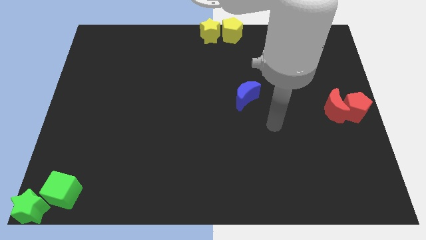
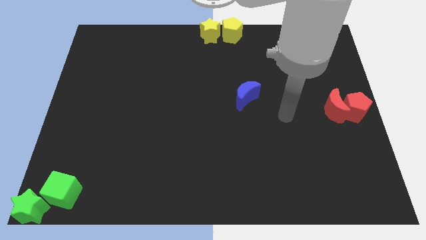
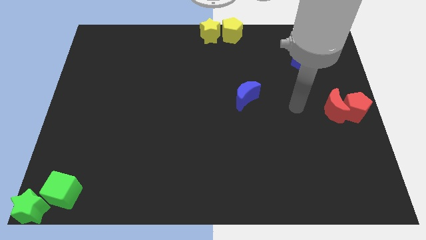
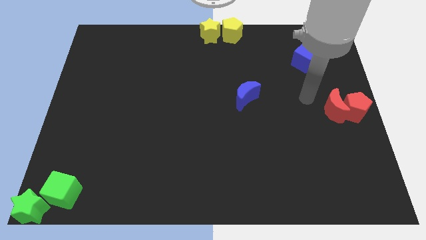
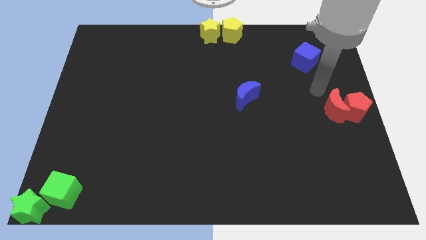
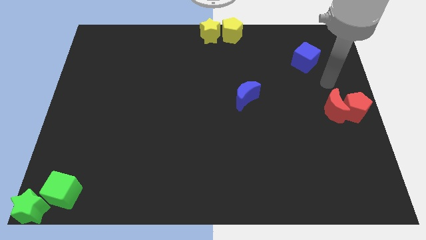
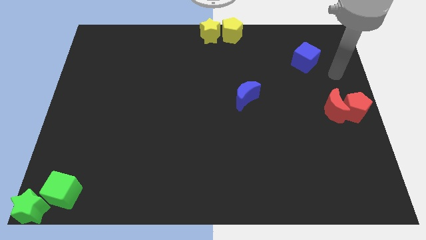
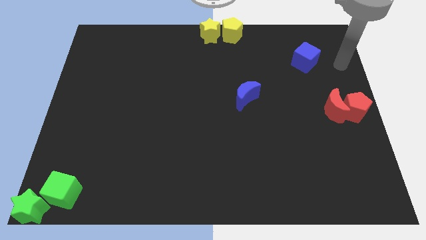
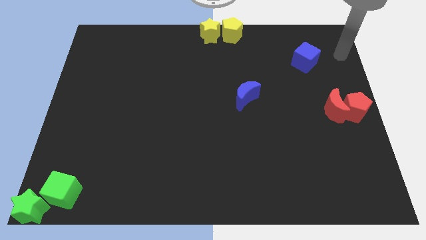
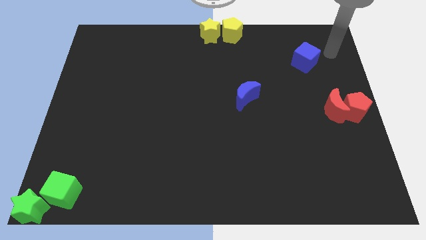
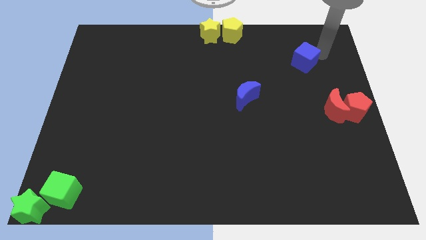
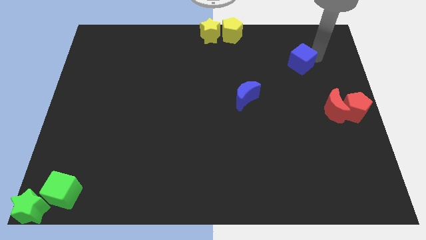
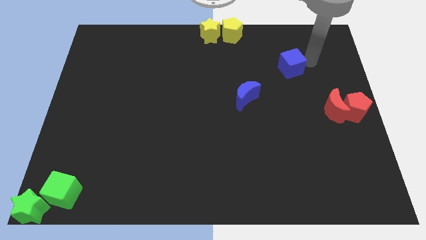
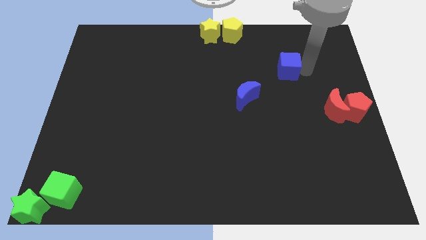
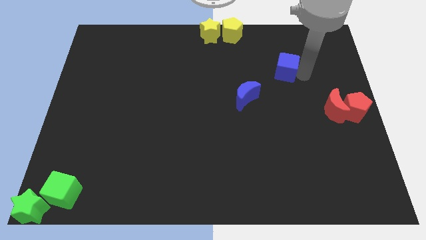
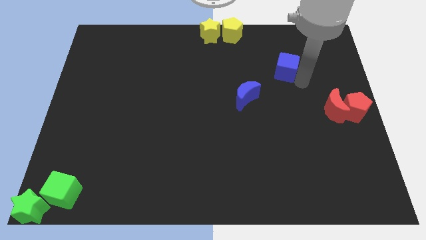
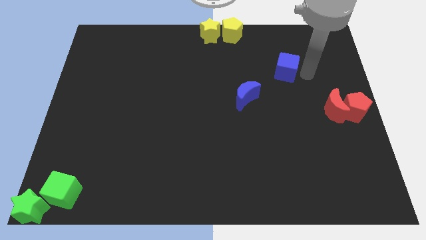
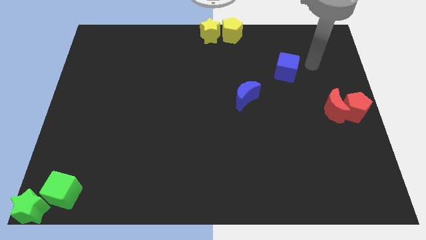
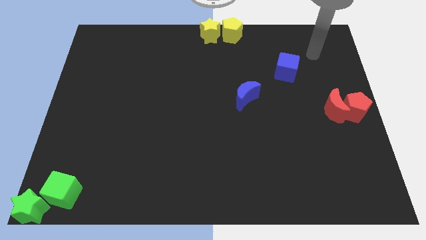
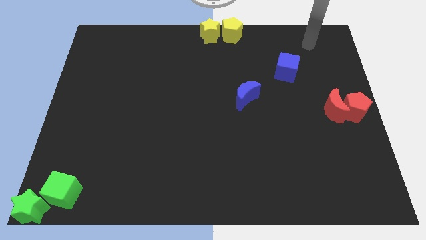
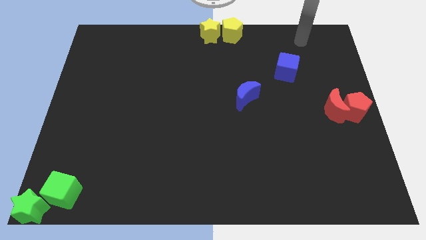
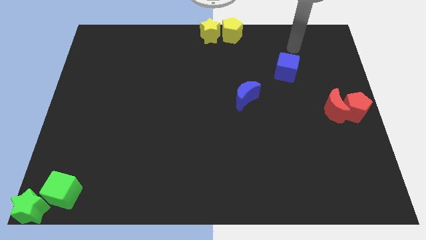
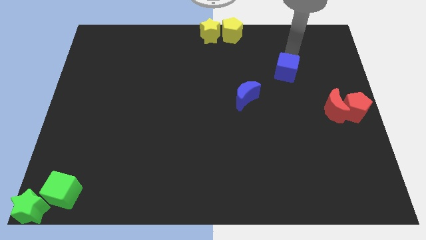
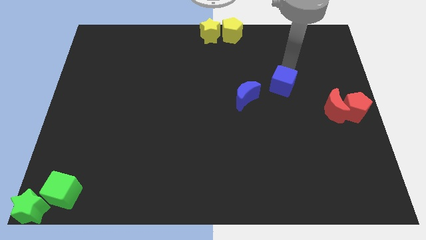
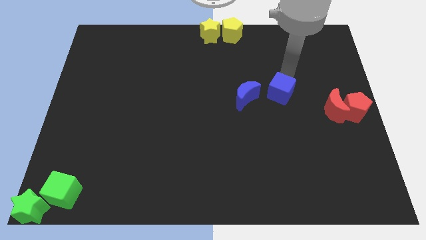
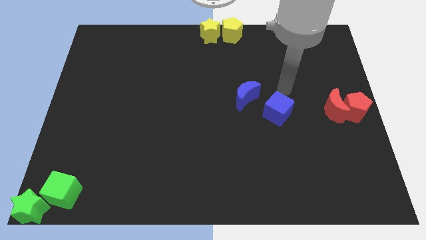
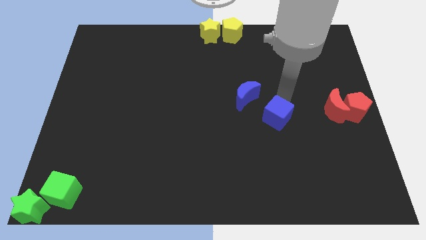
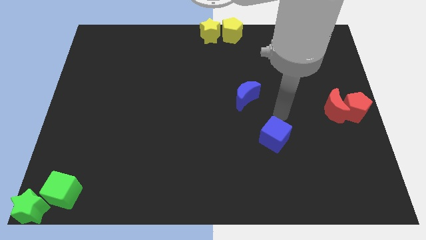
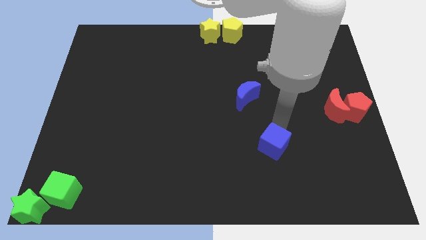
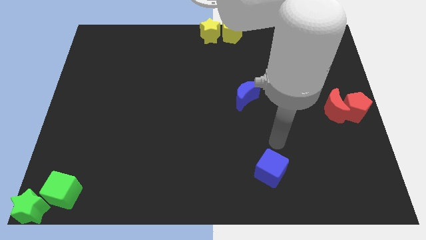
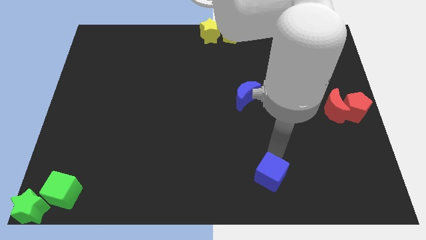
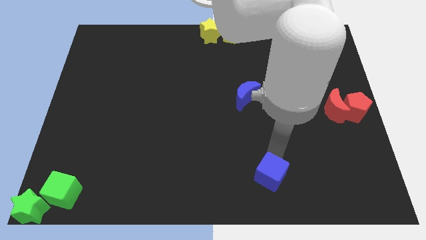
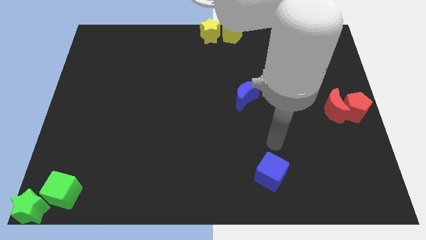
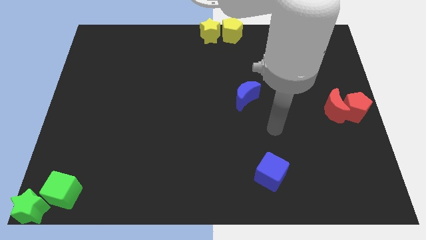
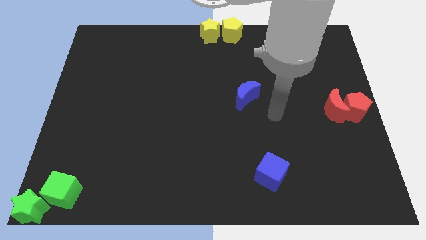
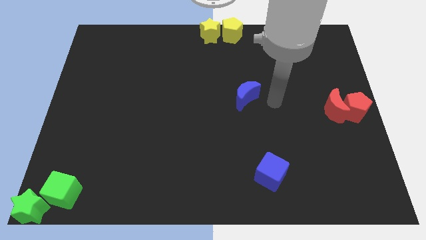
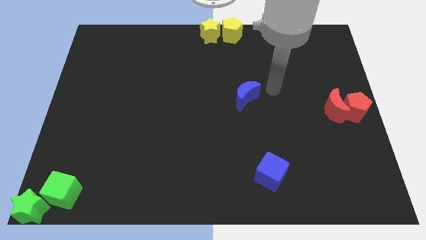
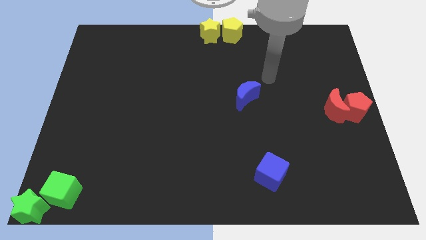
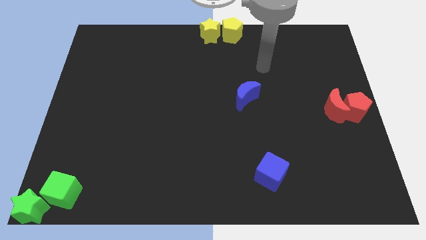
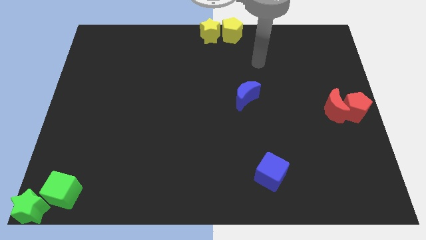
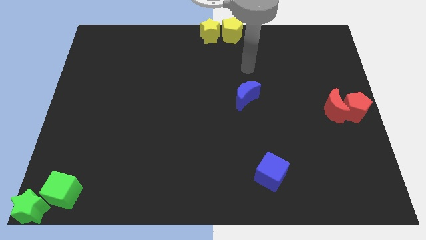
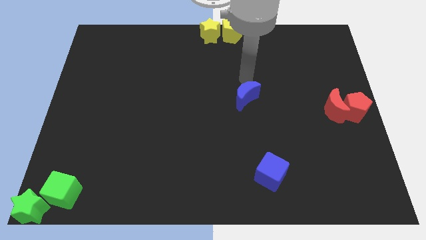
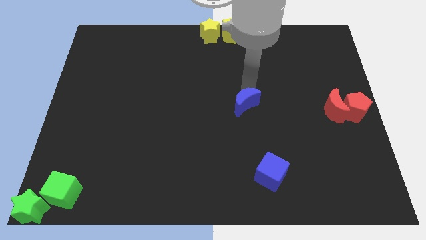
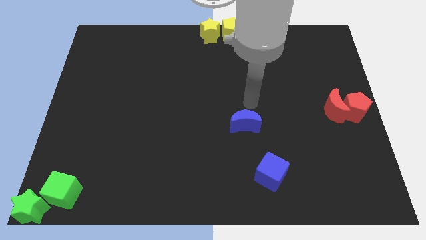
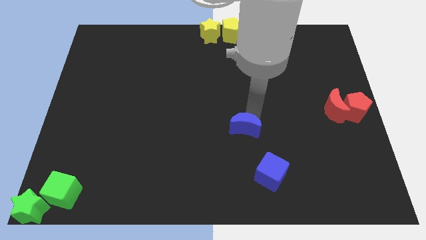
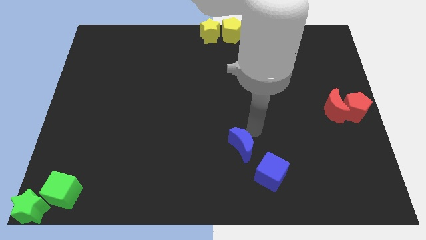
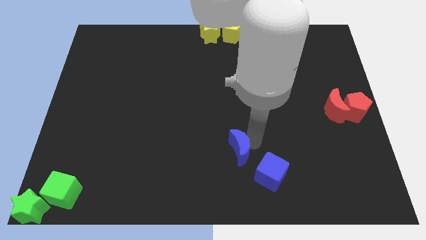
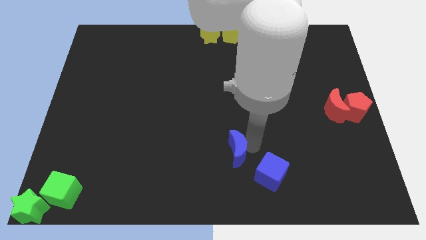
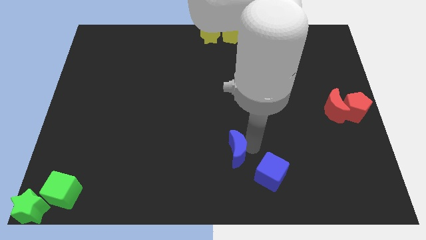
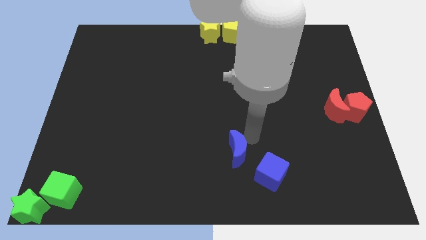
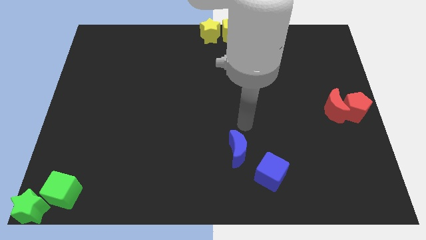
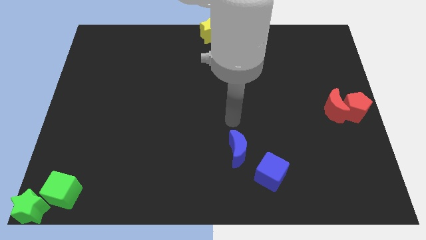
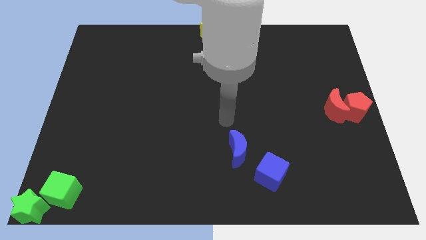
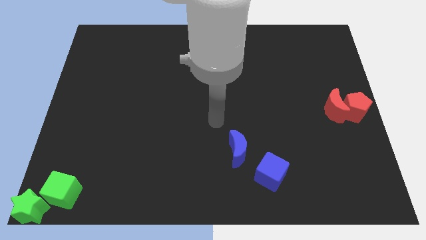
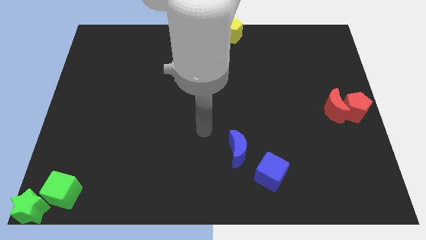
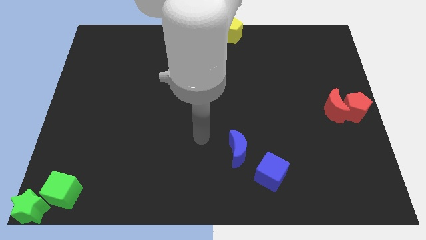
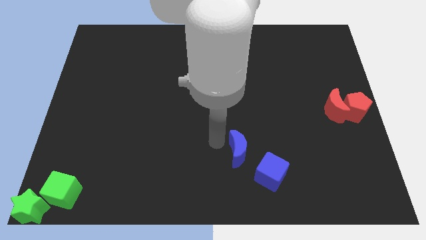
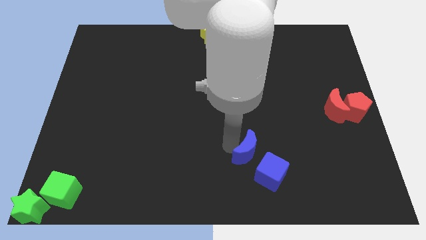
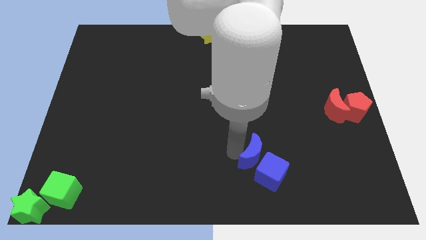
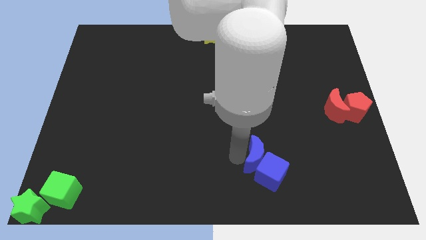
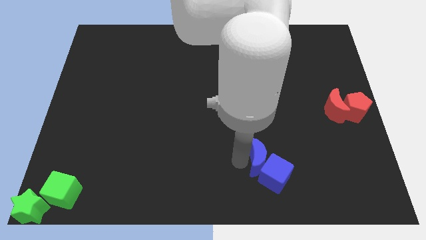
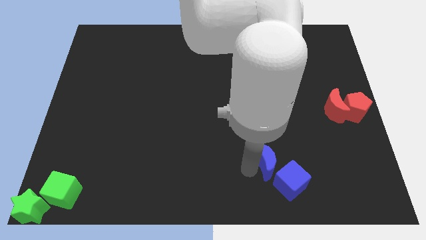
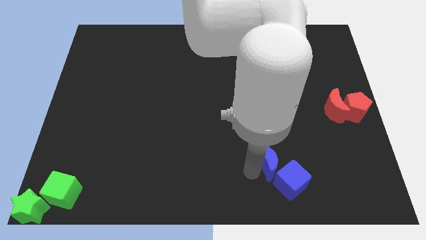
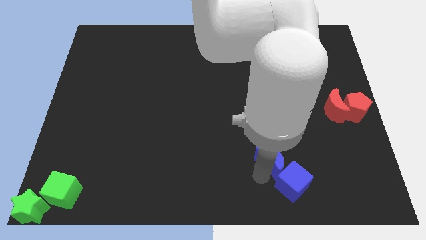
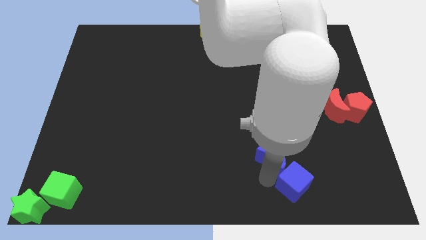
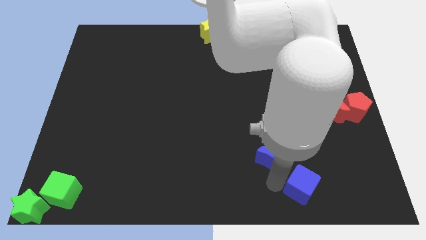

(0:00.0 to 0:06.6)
push the blue crescent into the blue cube

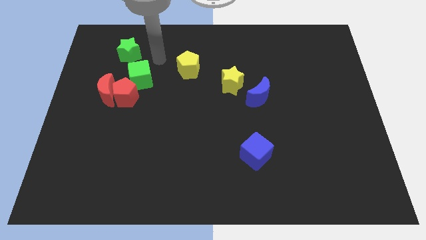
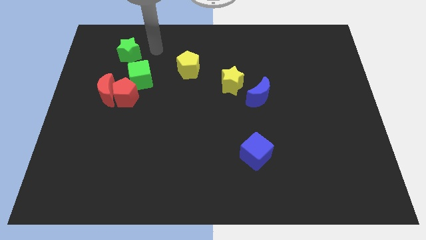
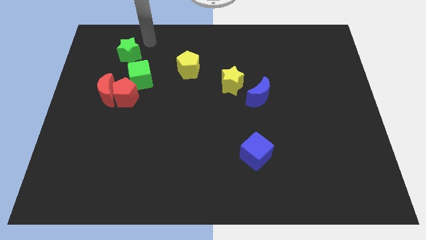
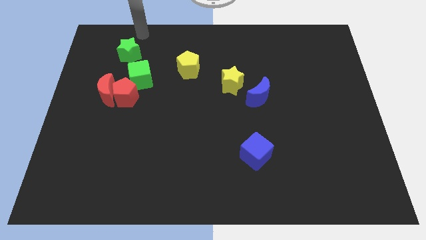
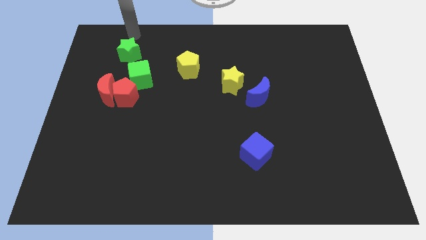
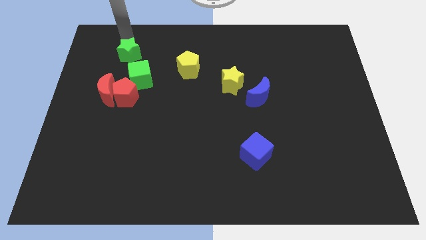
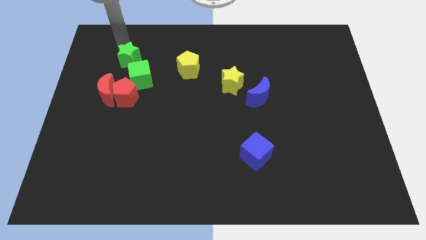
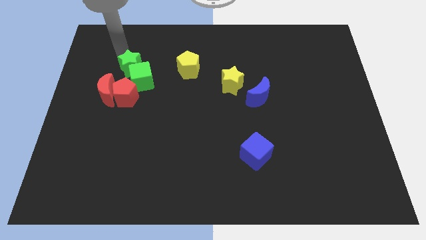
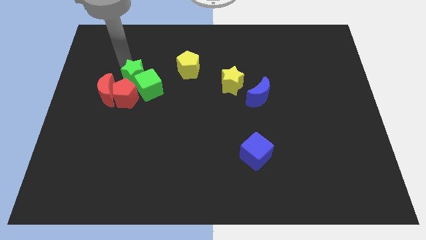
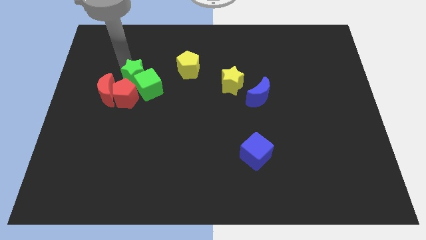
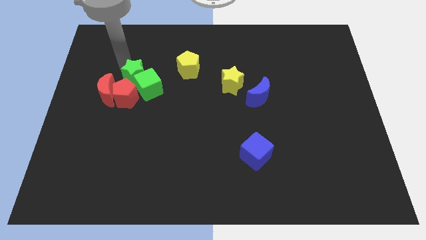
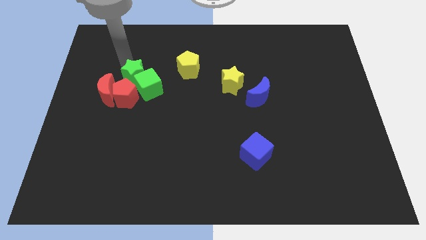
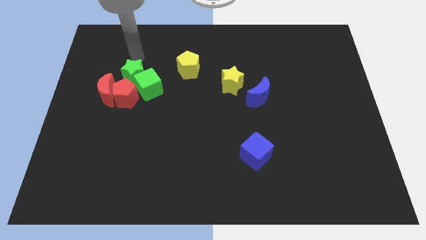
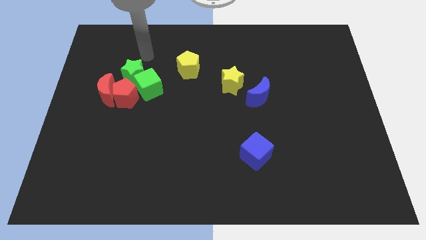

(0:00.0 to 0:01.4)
push the green cube using the green star towards the center

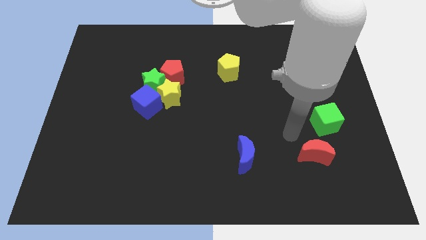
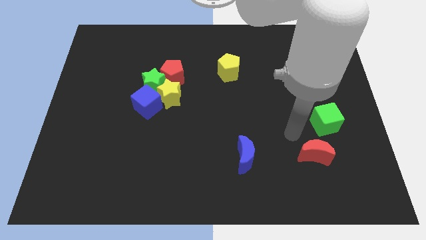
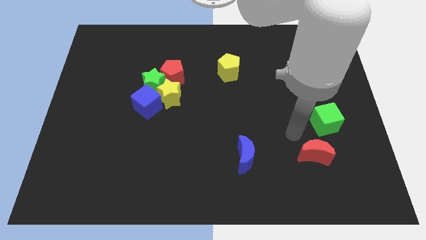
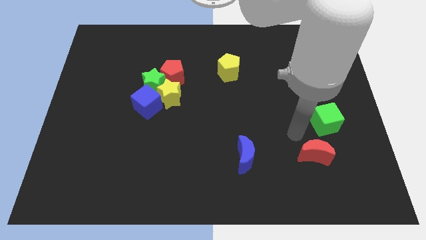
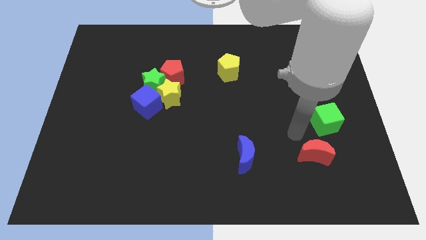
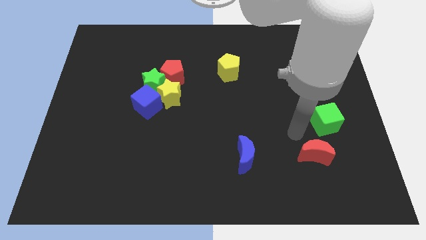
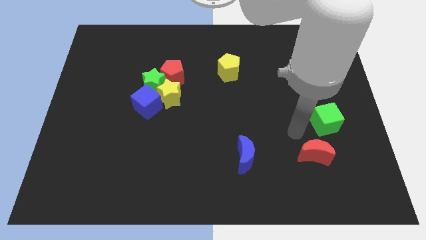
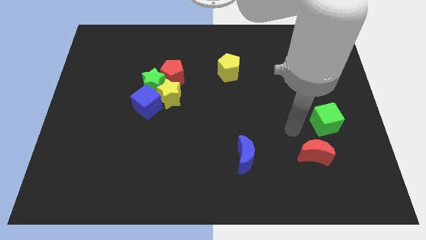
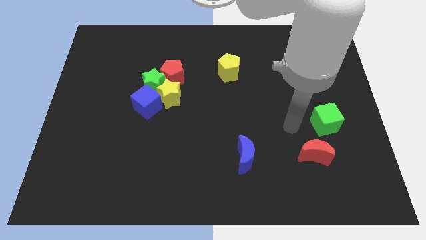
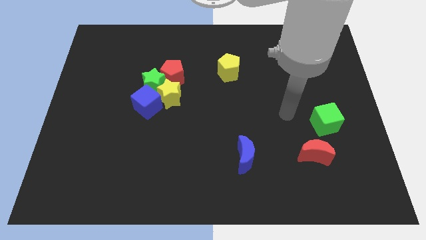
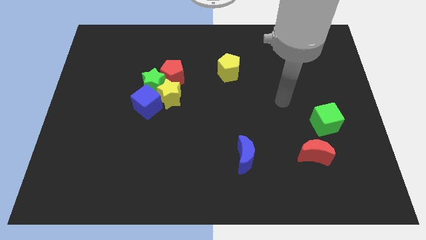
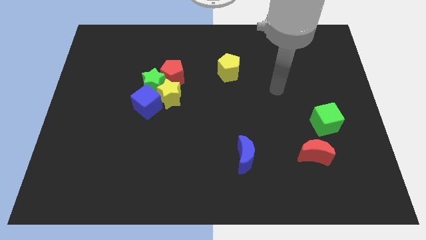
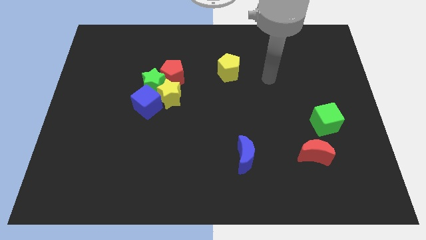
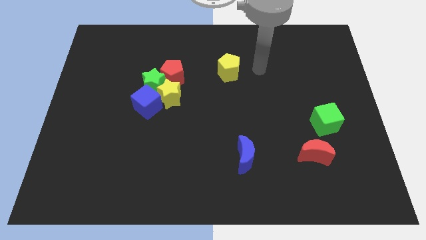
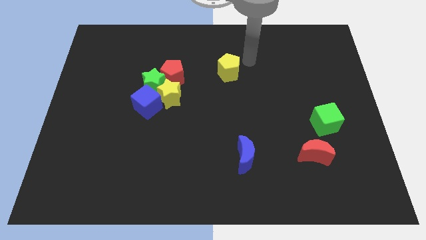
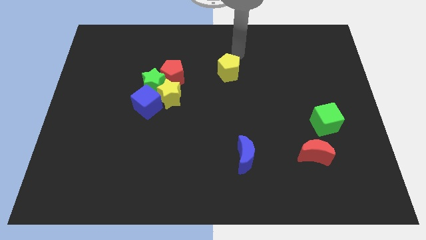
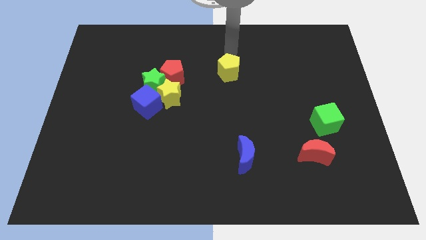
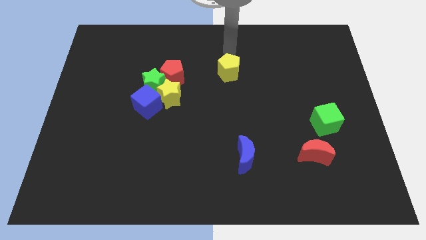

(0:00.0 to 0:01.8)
move your arm above the yellow pentagon
